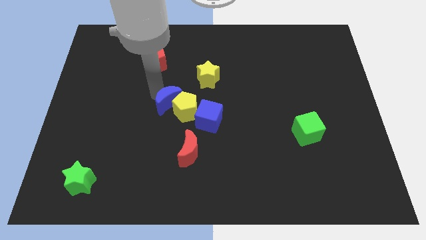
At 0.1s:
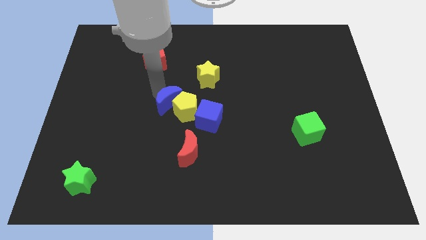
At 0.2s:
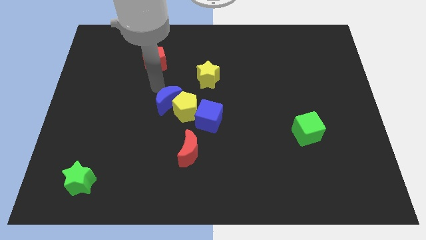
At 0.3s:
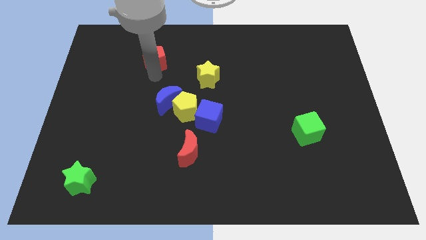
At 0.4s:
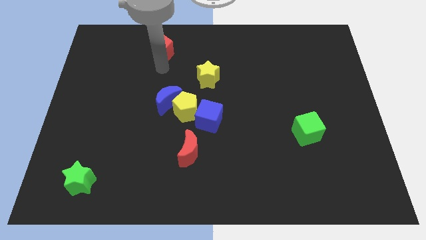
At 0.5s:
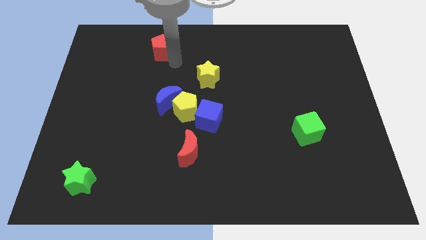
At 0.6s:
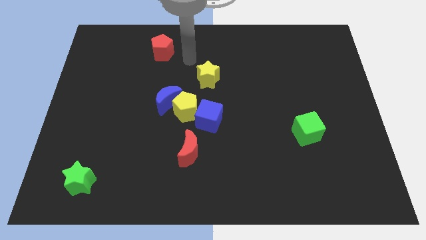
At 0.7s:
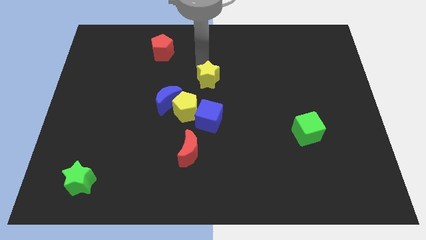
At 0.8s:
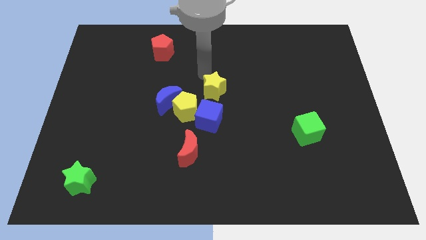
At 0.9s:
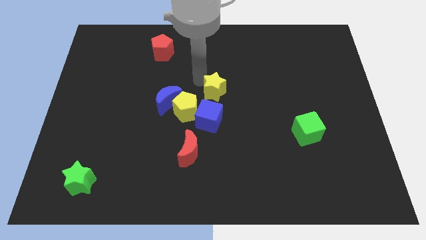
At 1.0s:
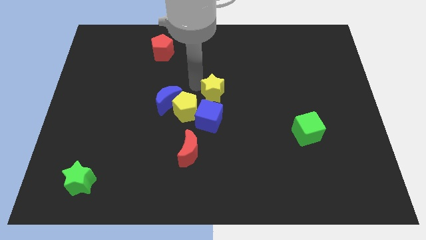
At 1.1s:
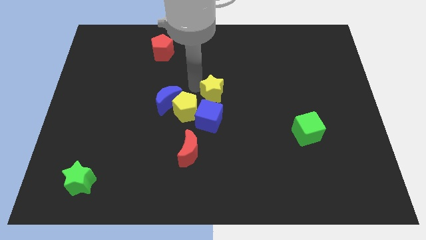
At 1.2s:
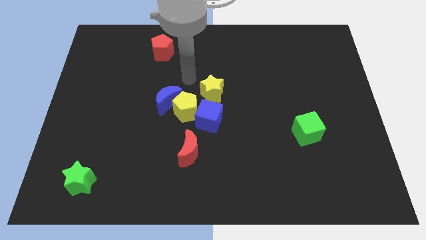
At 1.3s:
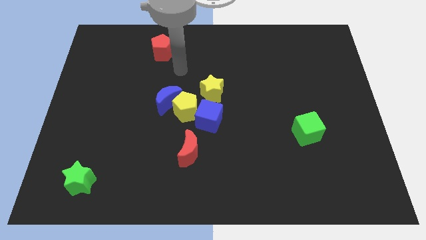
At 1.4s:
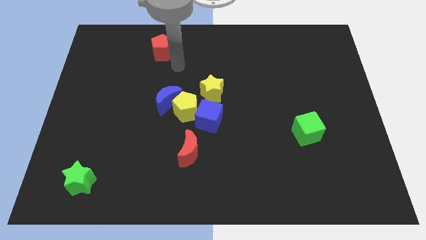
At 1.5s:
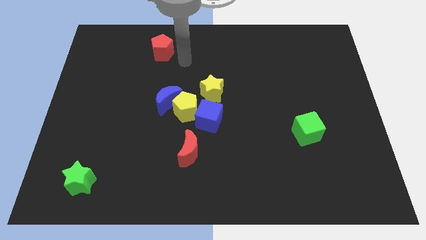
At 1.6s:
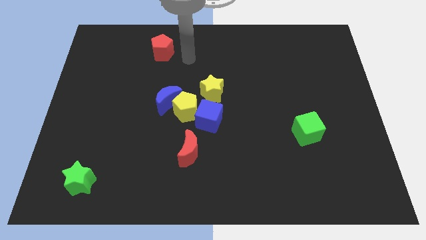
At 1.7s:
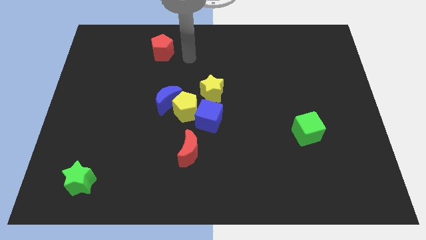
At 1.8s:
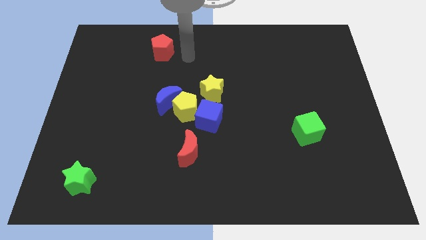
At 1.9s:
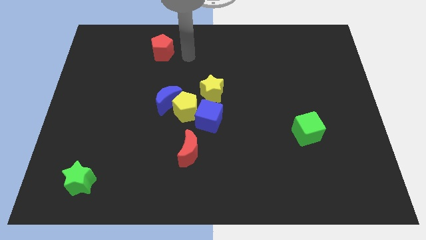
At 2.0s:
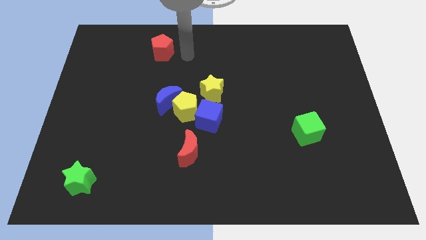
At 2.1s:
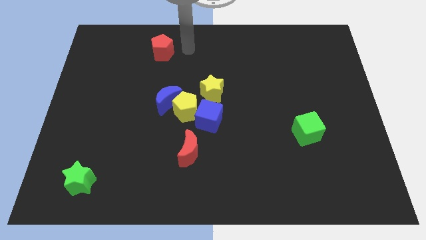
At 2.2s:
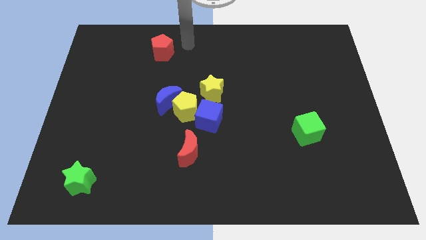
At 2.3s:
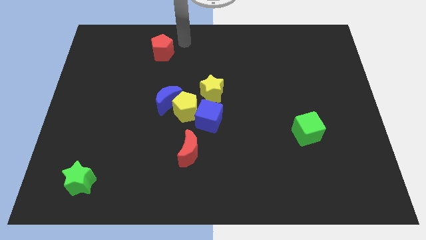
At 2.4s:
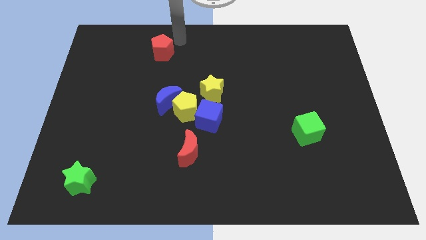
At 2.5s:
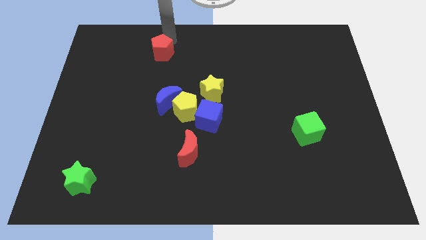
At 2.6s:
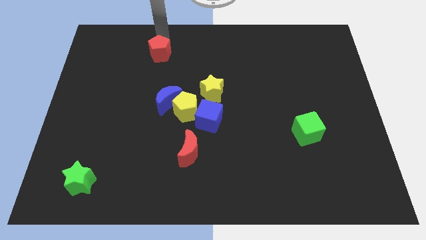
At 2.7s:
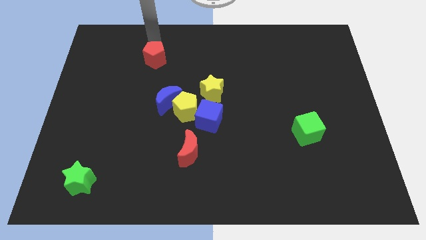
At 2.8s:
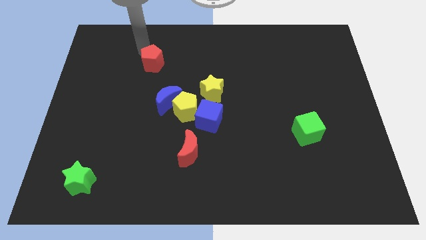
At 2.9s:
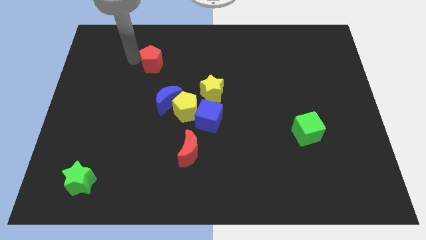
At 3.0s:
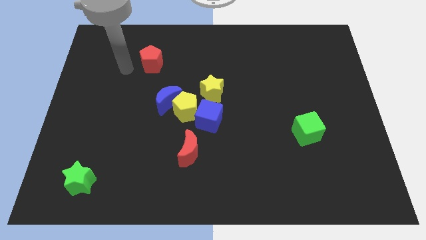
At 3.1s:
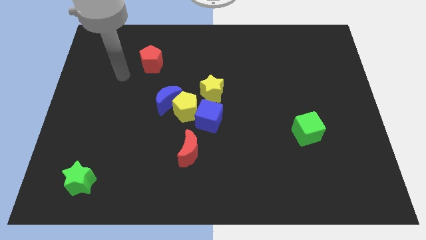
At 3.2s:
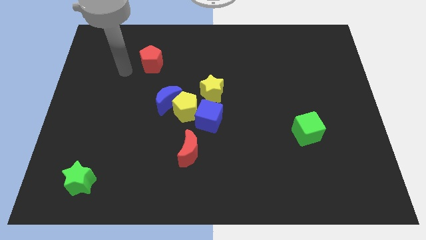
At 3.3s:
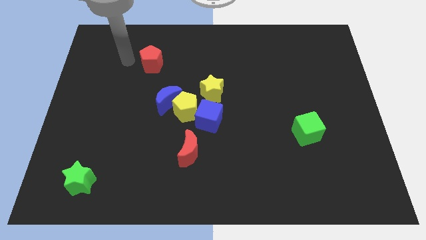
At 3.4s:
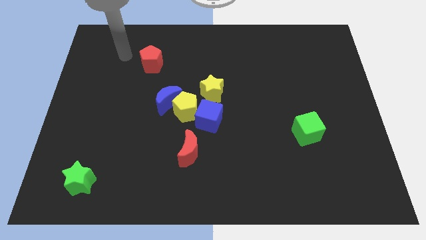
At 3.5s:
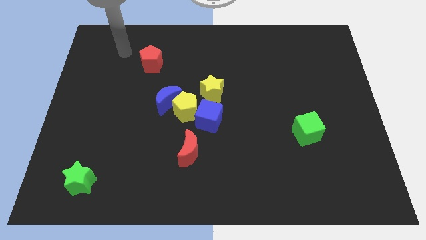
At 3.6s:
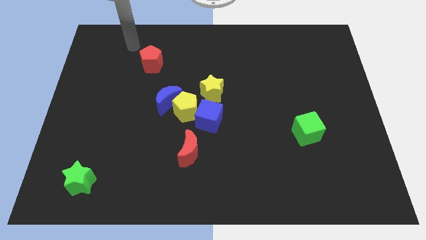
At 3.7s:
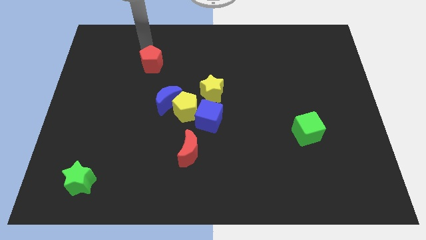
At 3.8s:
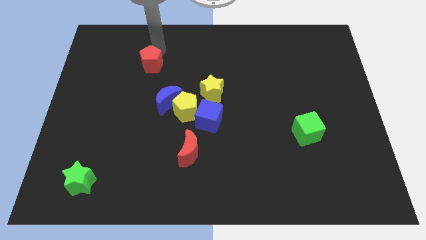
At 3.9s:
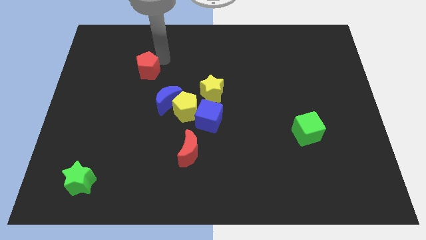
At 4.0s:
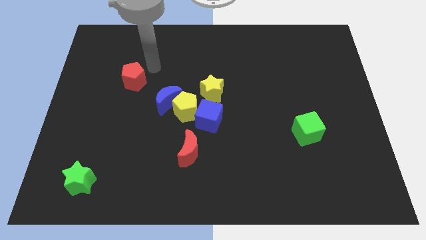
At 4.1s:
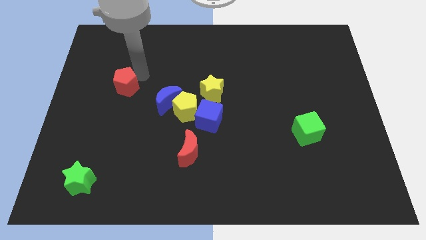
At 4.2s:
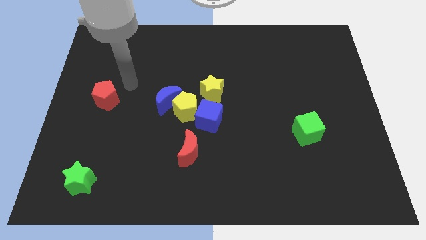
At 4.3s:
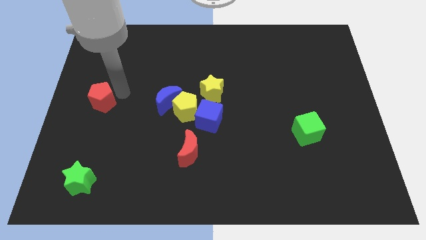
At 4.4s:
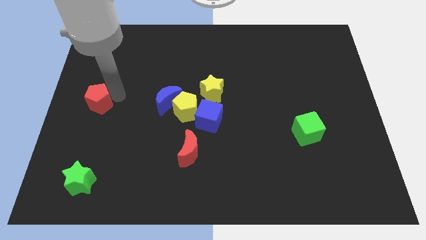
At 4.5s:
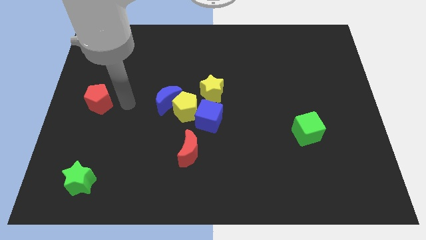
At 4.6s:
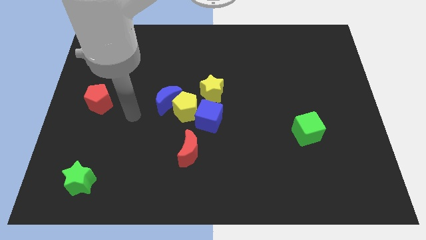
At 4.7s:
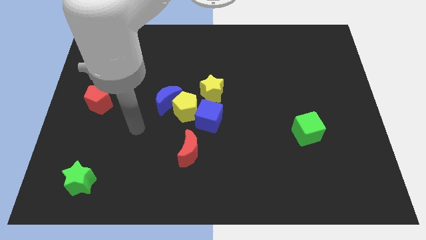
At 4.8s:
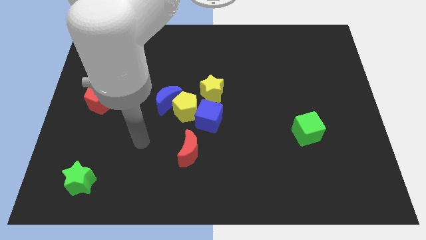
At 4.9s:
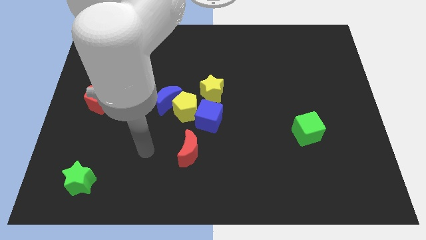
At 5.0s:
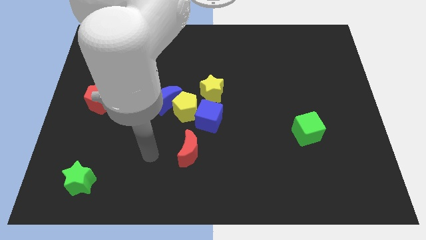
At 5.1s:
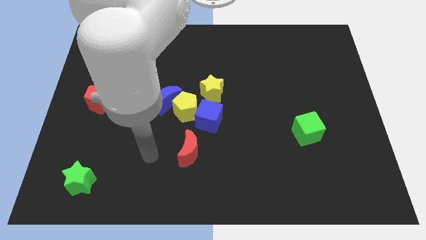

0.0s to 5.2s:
move the red pentagon towards the left of the board

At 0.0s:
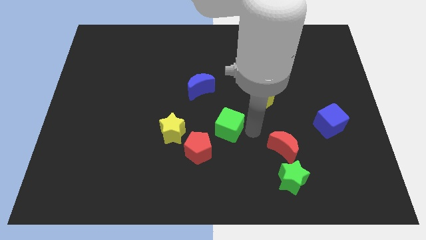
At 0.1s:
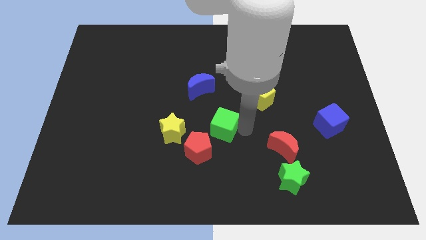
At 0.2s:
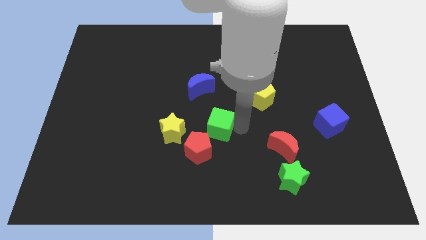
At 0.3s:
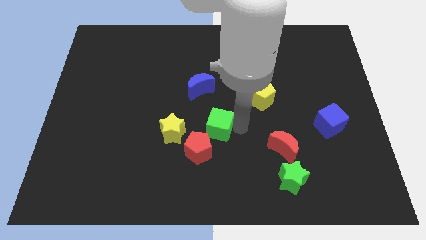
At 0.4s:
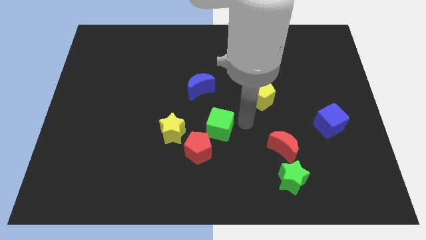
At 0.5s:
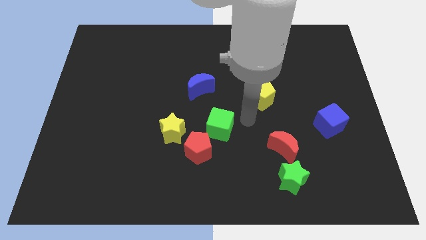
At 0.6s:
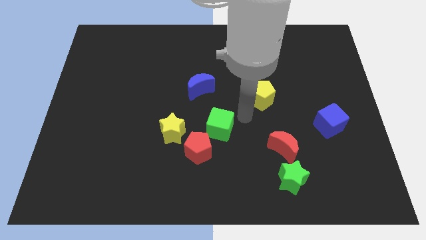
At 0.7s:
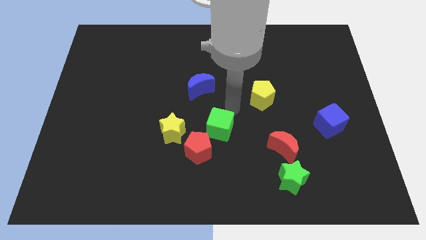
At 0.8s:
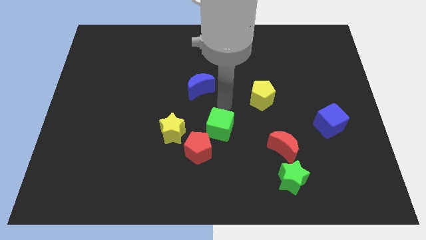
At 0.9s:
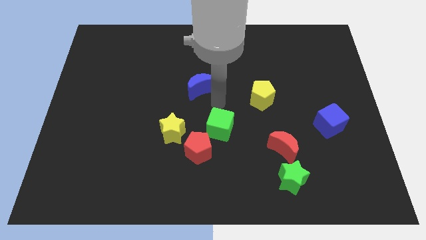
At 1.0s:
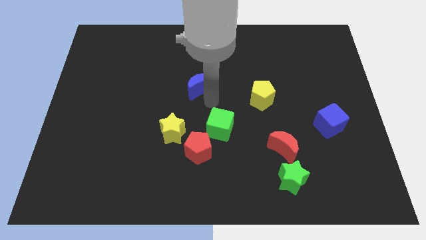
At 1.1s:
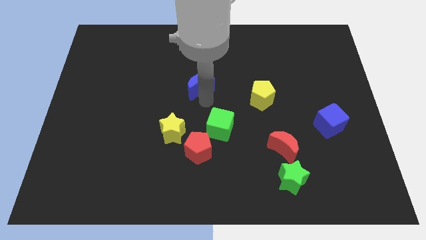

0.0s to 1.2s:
move the green cube diagonally bottom left to the yellow pentagon

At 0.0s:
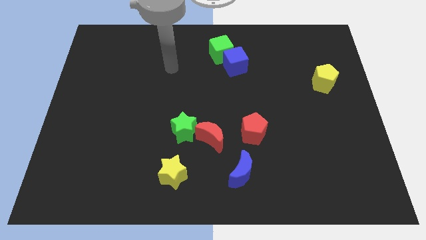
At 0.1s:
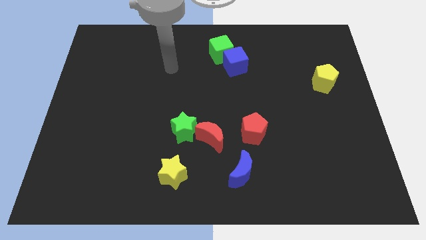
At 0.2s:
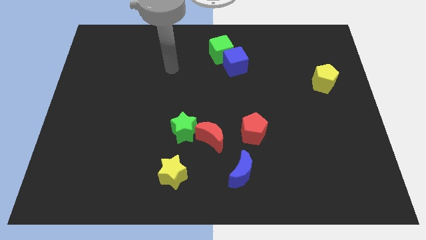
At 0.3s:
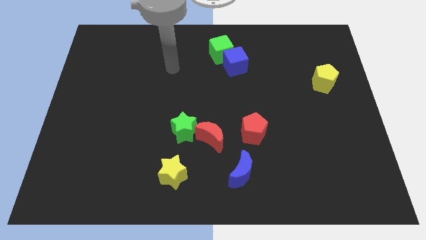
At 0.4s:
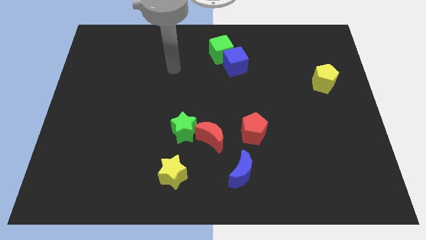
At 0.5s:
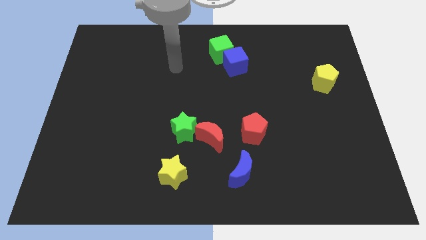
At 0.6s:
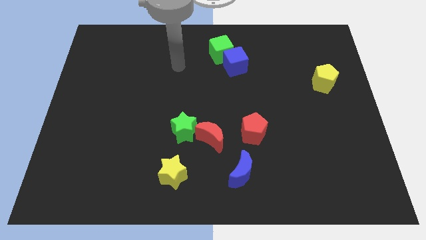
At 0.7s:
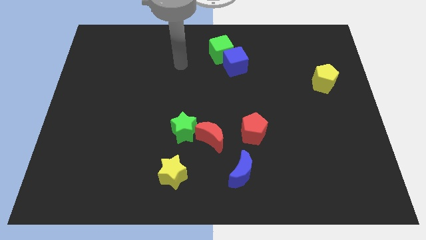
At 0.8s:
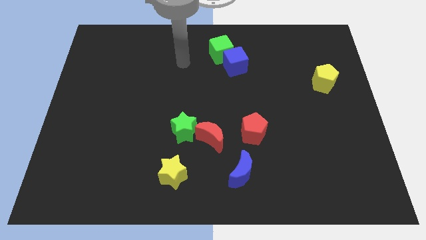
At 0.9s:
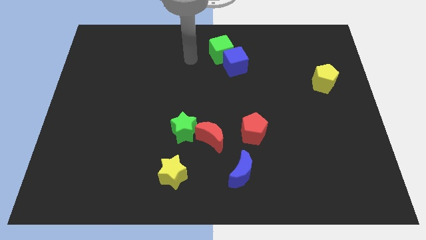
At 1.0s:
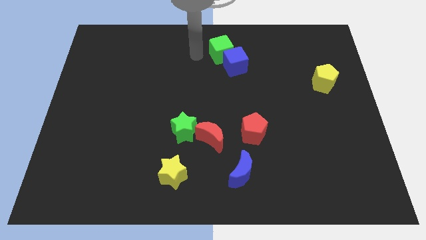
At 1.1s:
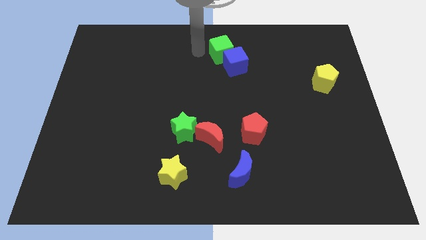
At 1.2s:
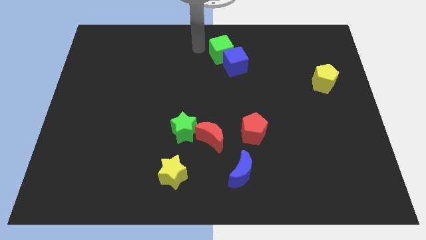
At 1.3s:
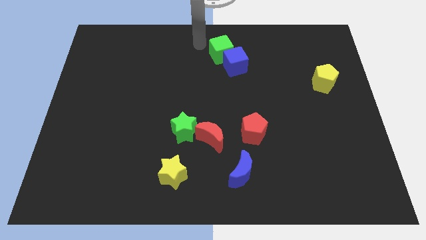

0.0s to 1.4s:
push your hand at the top left of the green cube

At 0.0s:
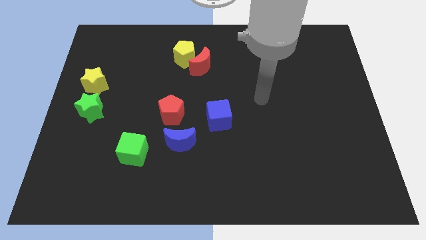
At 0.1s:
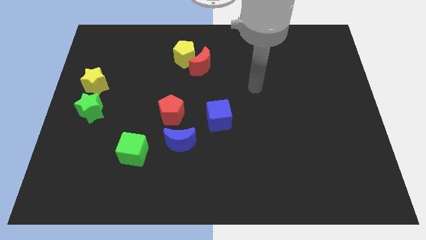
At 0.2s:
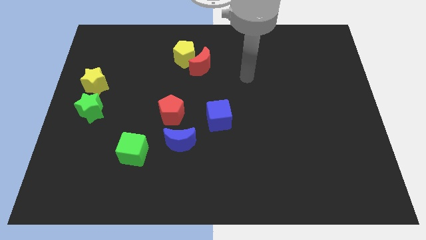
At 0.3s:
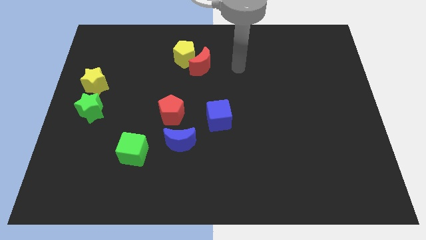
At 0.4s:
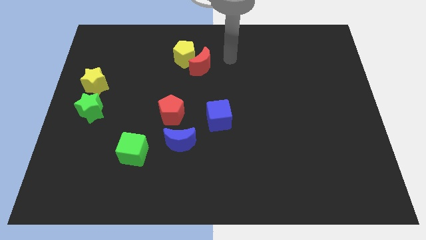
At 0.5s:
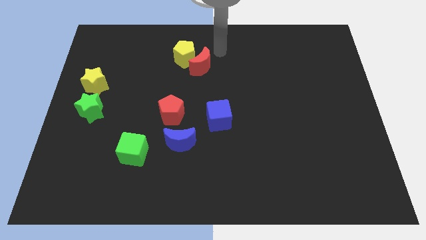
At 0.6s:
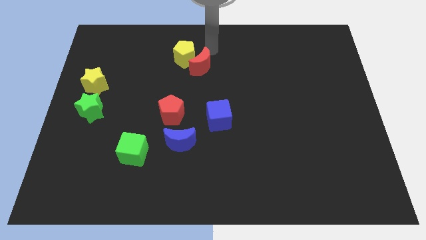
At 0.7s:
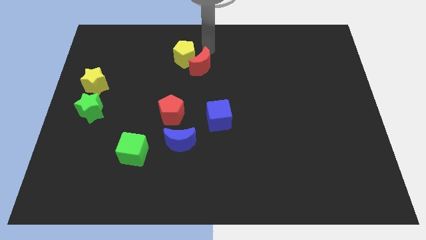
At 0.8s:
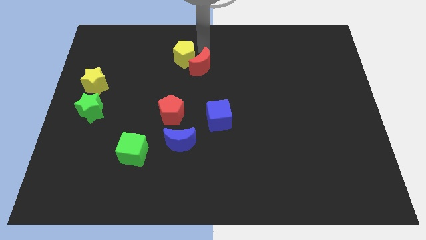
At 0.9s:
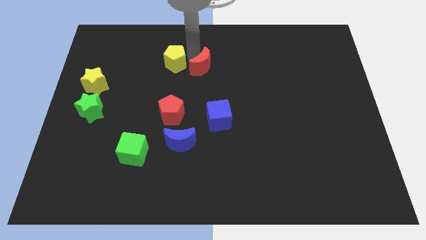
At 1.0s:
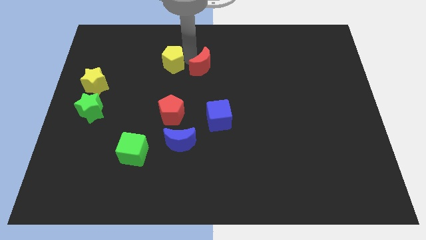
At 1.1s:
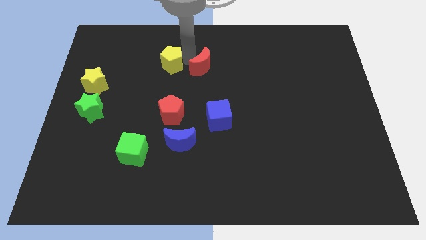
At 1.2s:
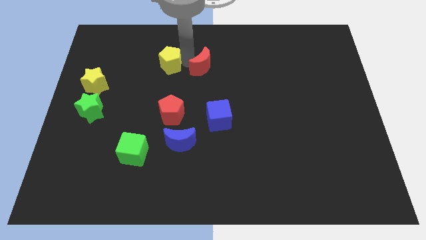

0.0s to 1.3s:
separate the yellow star and red crescent on top of board
